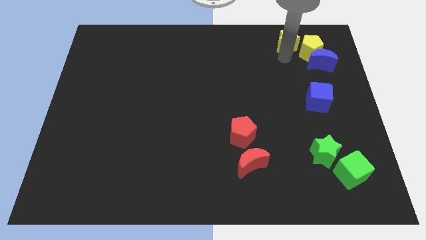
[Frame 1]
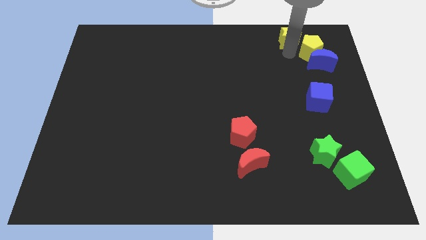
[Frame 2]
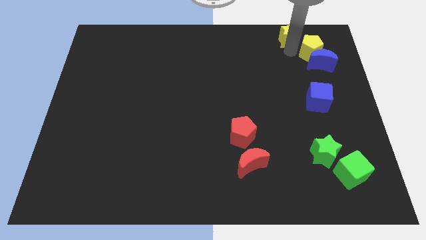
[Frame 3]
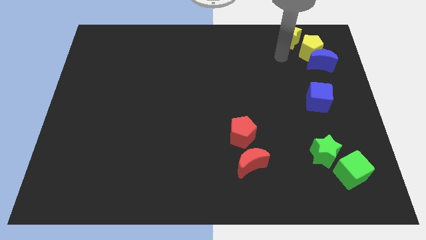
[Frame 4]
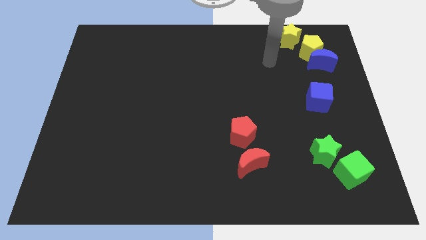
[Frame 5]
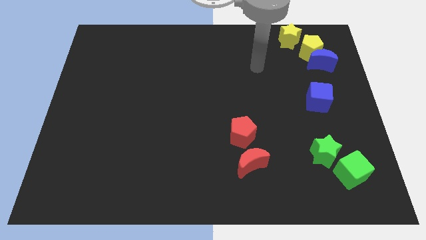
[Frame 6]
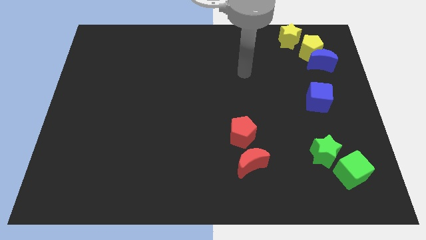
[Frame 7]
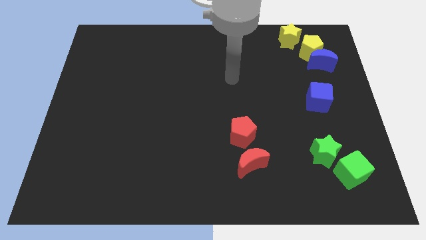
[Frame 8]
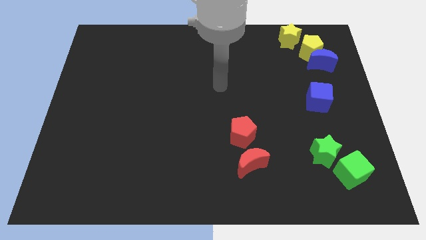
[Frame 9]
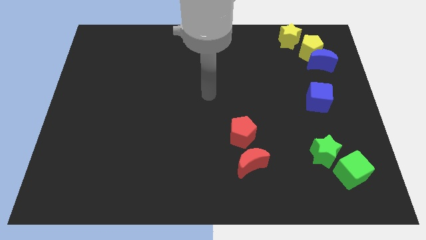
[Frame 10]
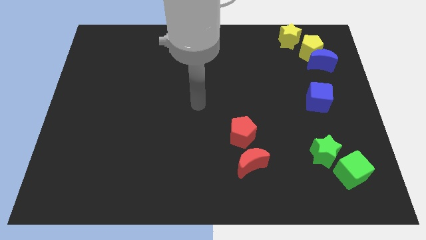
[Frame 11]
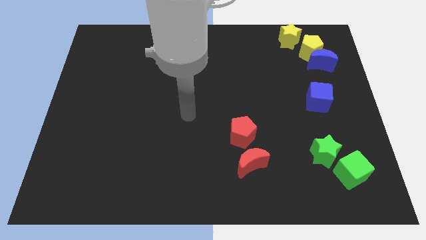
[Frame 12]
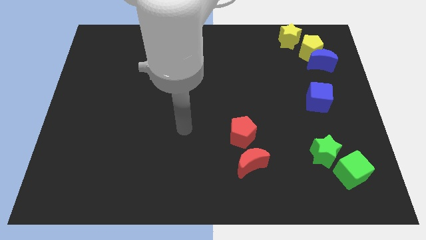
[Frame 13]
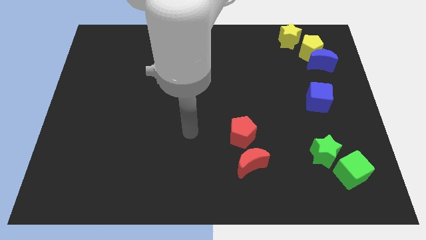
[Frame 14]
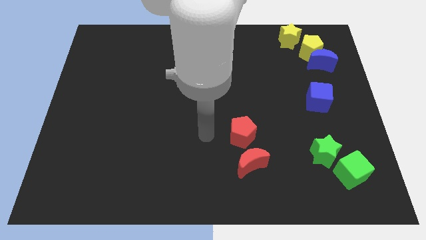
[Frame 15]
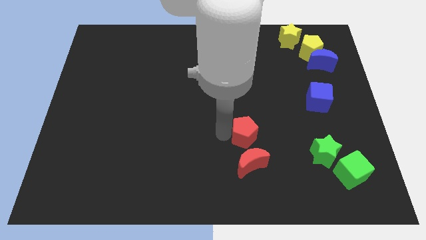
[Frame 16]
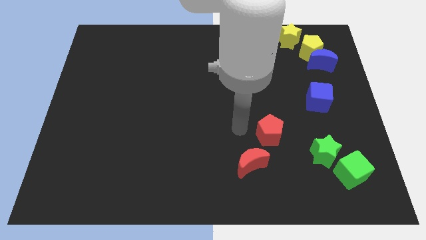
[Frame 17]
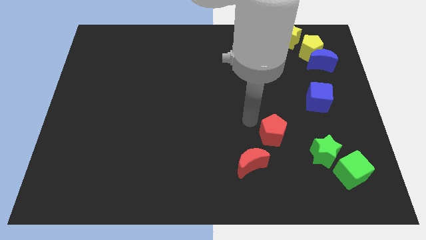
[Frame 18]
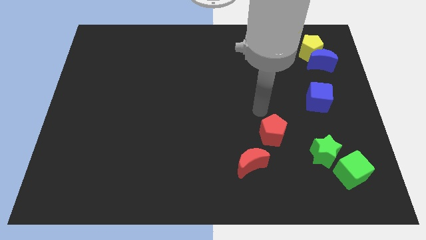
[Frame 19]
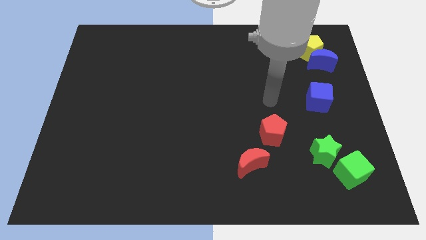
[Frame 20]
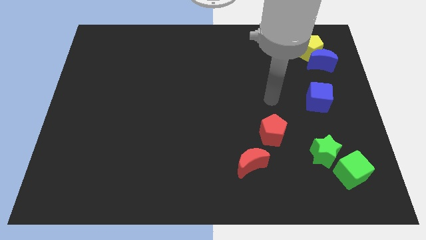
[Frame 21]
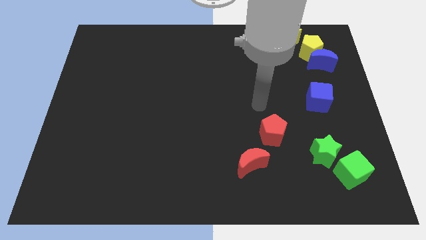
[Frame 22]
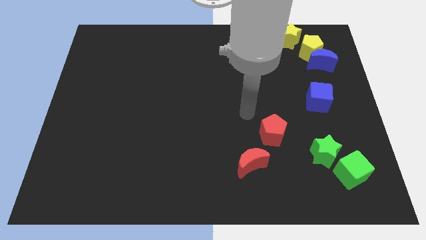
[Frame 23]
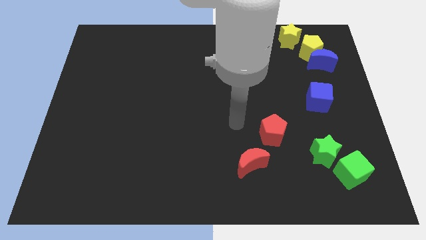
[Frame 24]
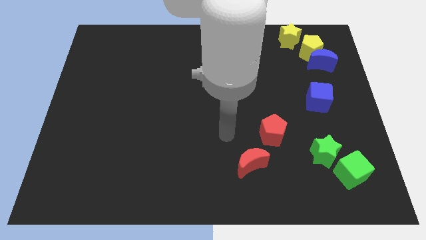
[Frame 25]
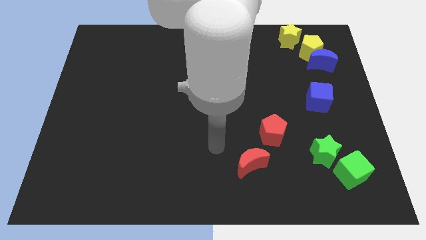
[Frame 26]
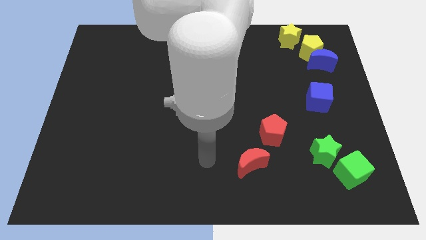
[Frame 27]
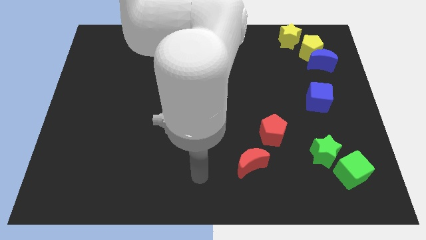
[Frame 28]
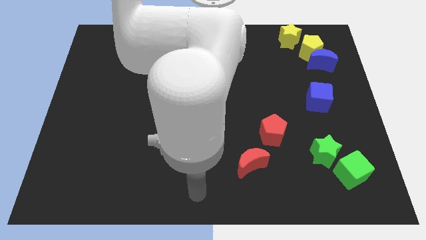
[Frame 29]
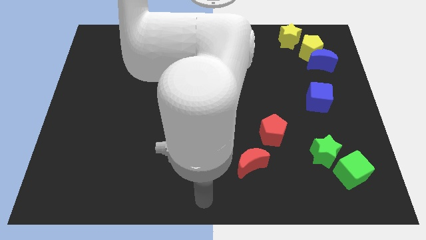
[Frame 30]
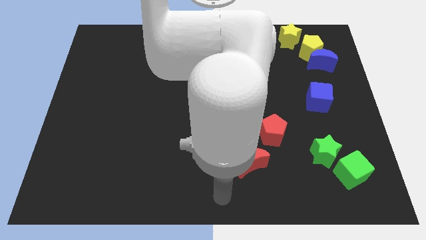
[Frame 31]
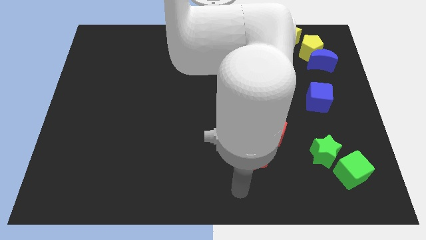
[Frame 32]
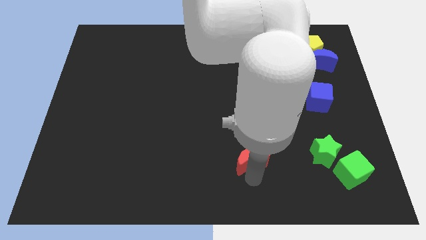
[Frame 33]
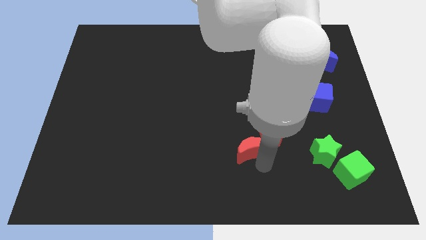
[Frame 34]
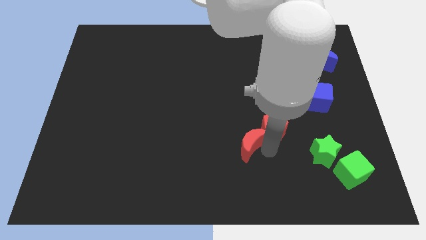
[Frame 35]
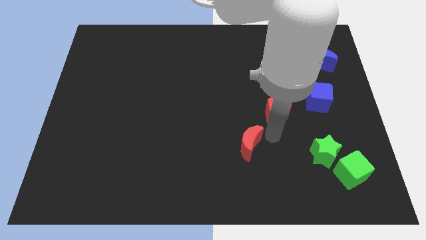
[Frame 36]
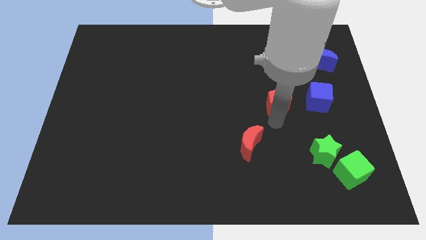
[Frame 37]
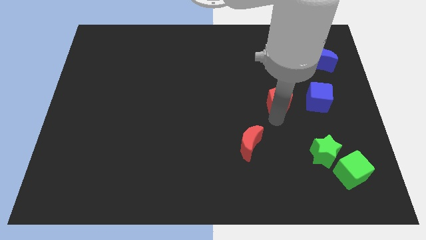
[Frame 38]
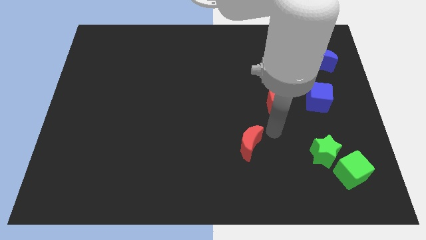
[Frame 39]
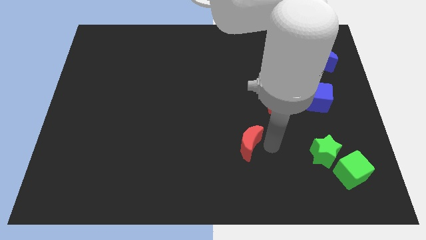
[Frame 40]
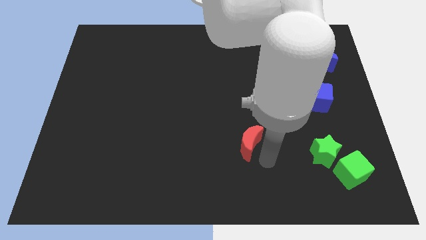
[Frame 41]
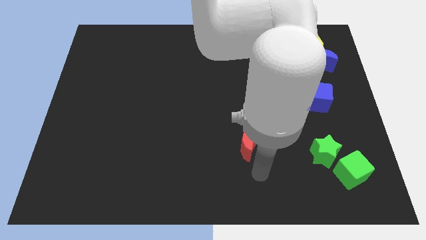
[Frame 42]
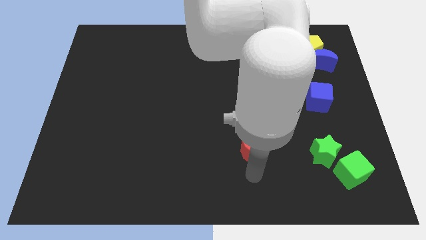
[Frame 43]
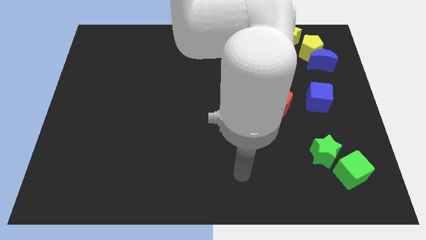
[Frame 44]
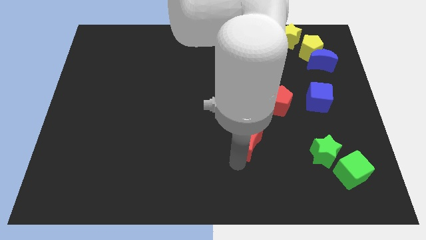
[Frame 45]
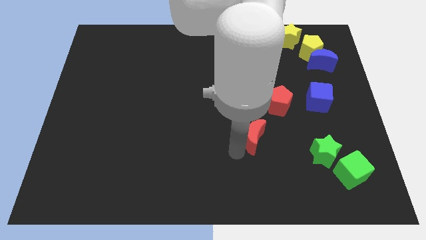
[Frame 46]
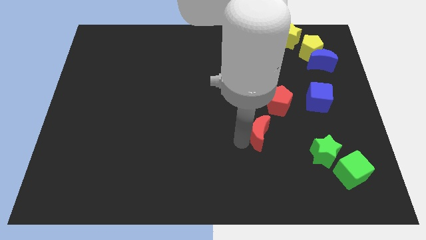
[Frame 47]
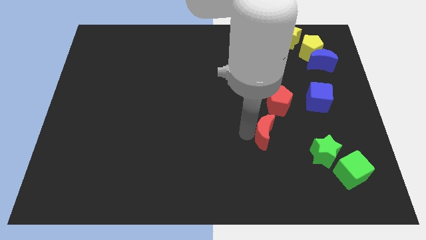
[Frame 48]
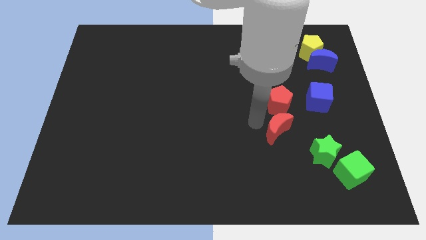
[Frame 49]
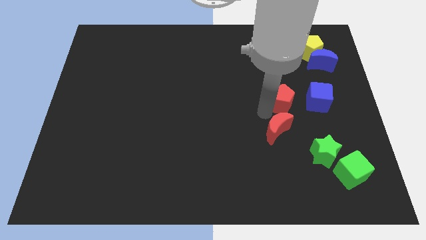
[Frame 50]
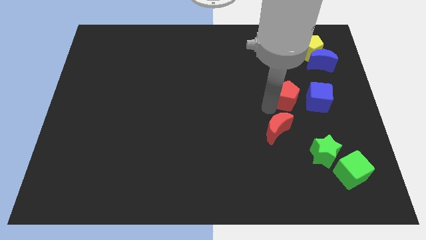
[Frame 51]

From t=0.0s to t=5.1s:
move the red pentagon horizontally at the left side of the blue cube

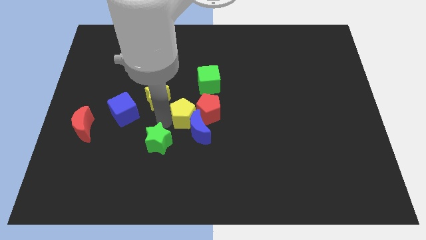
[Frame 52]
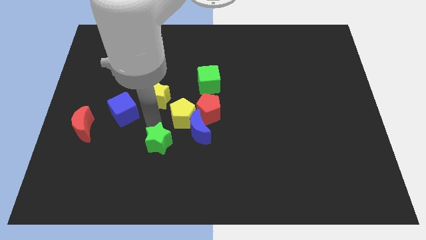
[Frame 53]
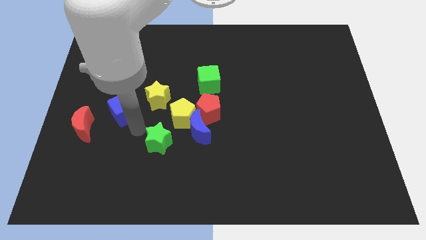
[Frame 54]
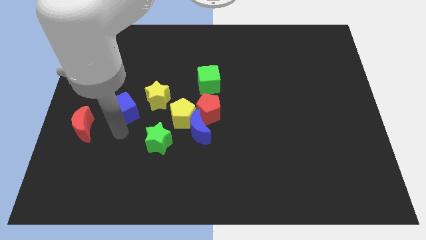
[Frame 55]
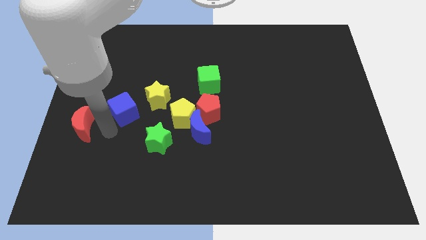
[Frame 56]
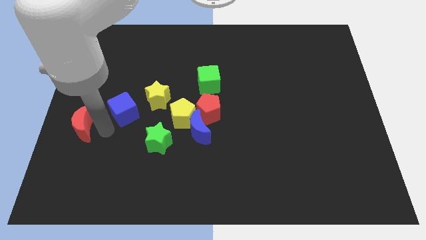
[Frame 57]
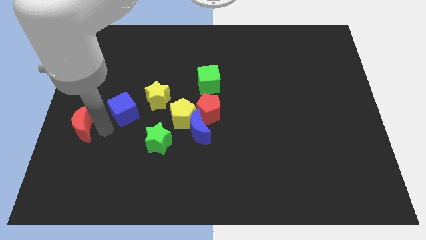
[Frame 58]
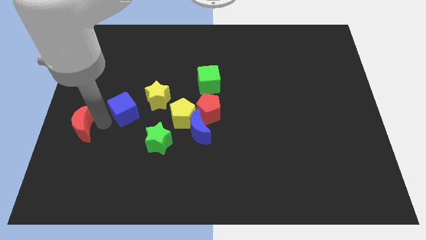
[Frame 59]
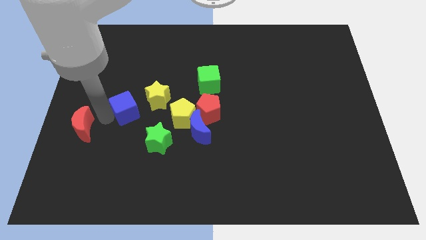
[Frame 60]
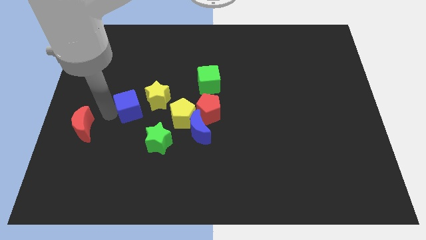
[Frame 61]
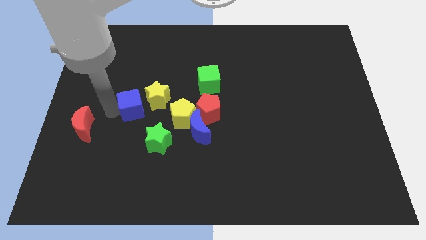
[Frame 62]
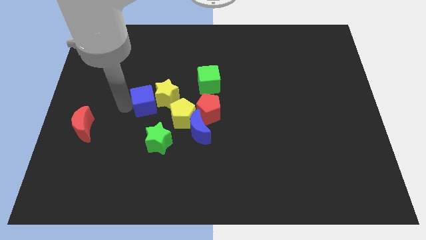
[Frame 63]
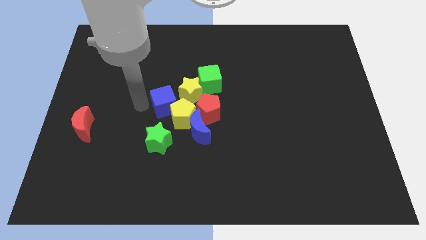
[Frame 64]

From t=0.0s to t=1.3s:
move the blue cube left to the yellow star

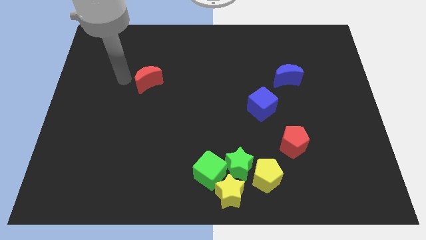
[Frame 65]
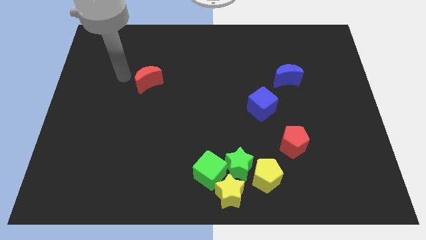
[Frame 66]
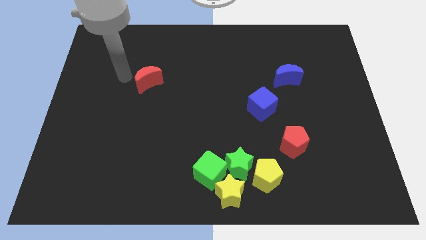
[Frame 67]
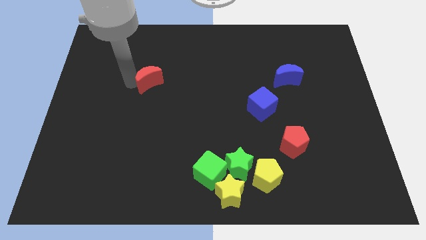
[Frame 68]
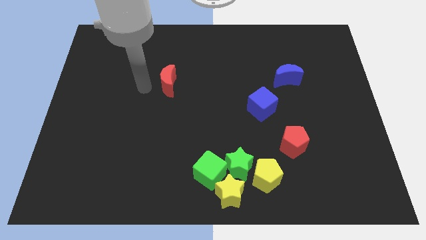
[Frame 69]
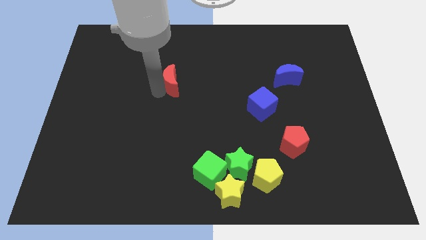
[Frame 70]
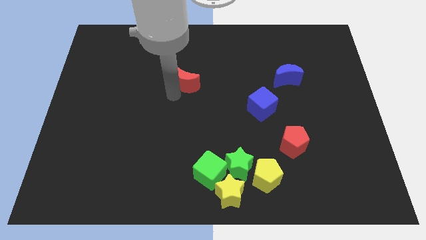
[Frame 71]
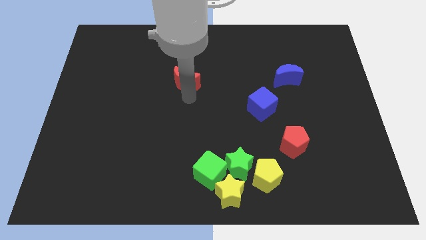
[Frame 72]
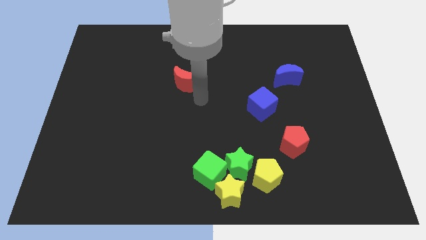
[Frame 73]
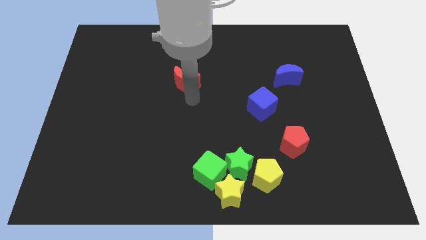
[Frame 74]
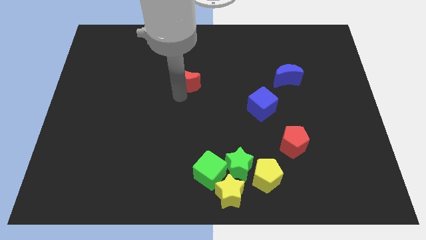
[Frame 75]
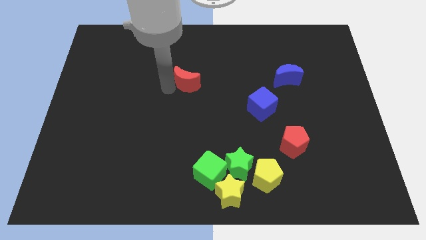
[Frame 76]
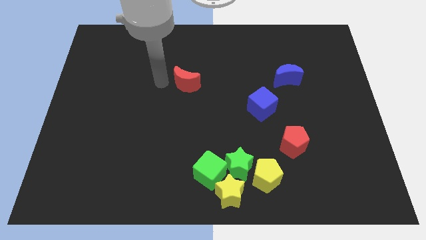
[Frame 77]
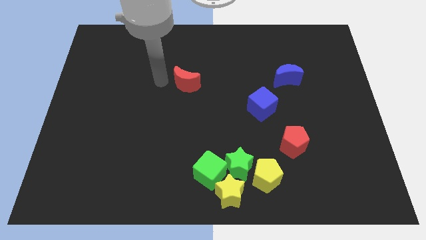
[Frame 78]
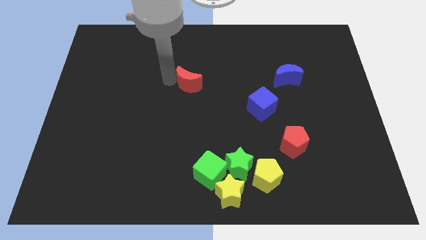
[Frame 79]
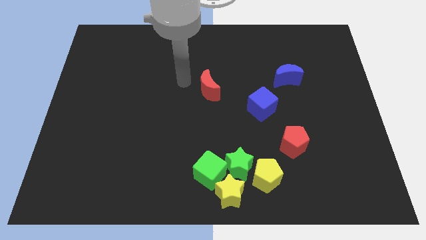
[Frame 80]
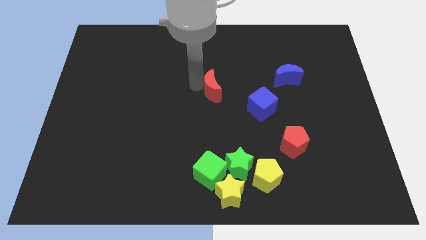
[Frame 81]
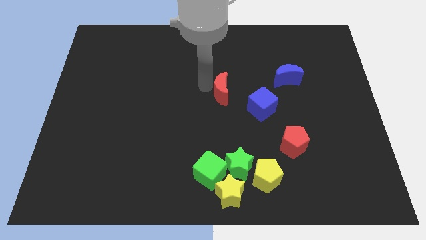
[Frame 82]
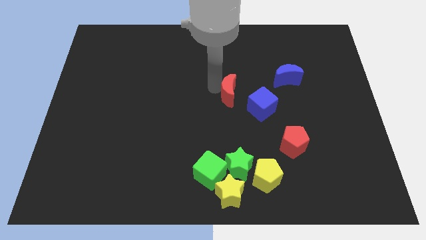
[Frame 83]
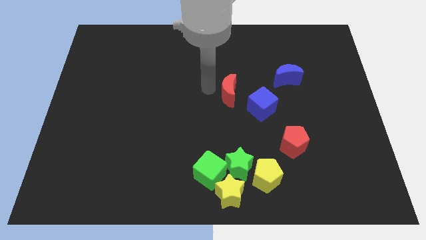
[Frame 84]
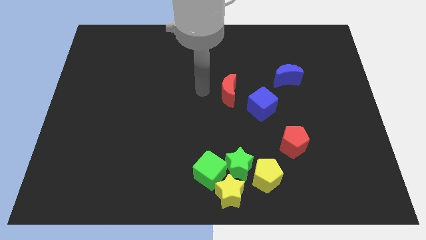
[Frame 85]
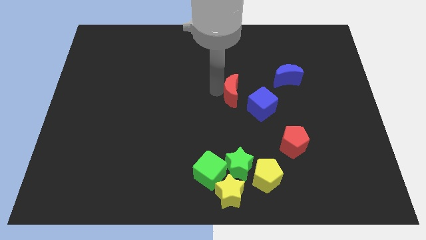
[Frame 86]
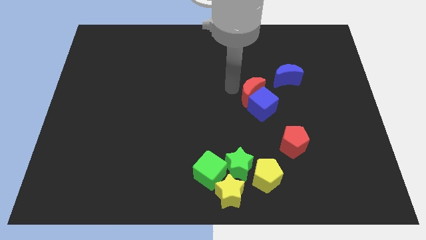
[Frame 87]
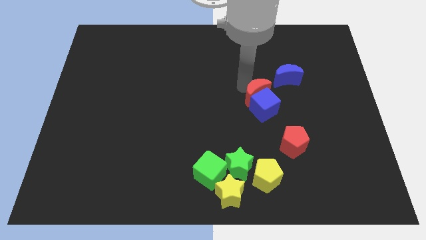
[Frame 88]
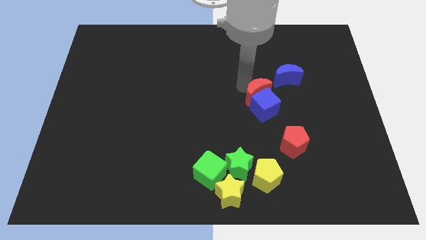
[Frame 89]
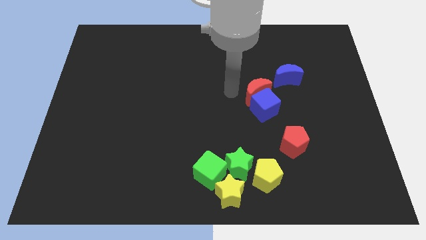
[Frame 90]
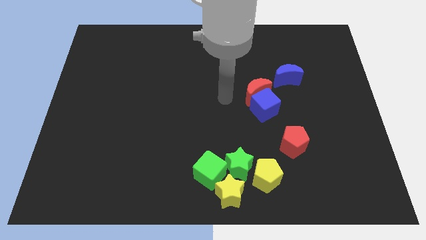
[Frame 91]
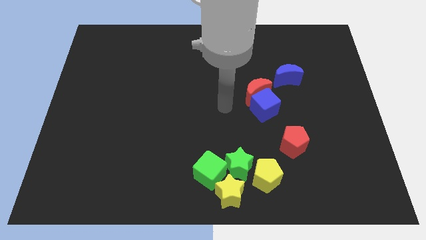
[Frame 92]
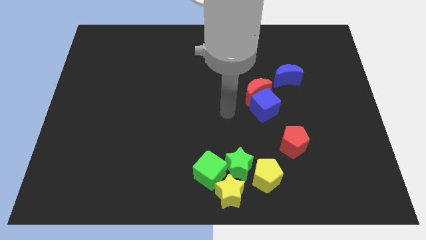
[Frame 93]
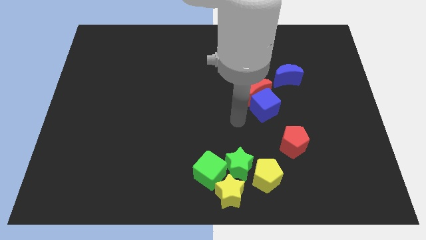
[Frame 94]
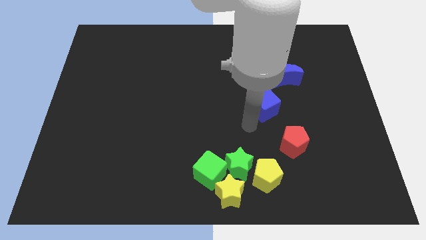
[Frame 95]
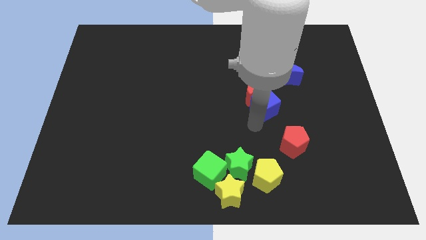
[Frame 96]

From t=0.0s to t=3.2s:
push the red crescent into the blue cube
